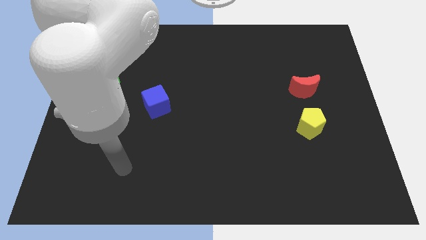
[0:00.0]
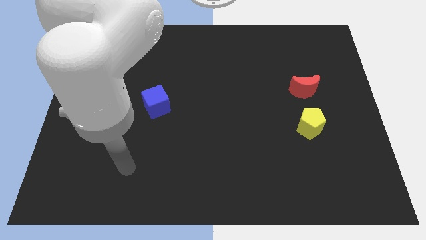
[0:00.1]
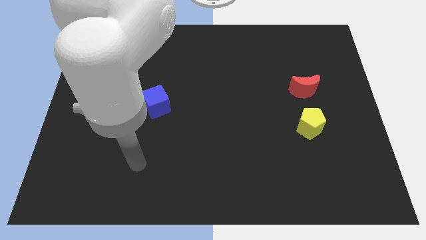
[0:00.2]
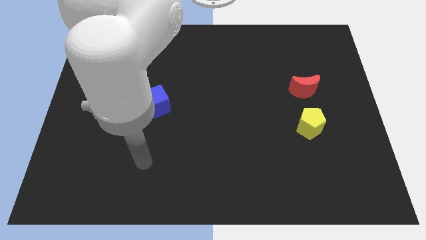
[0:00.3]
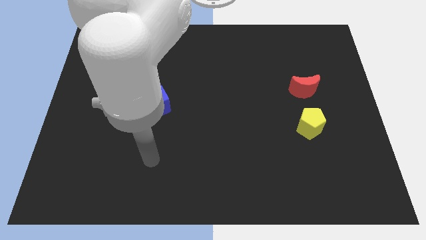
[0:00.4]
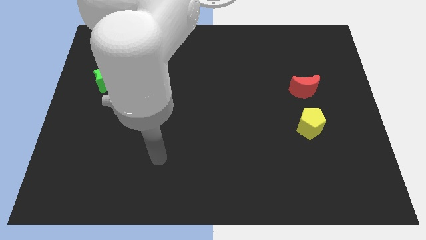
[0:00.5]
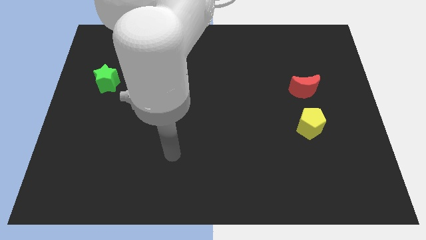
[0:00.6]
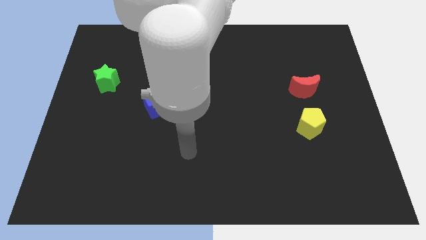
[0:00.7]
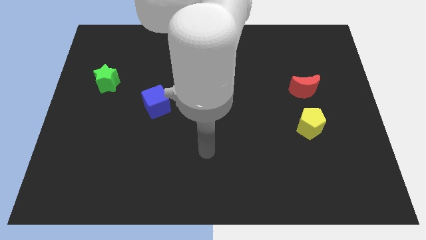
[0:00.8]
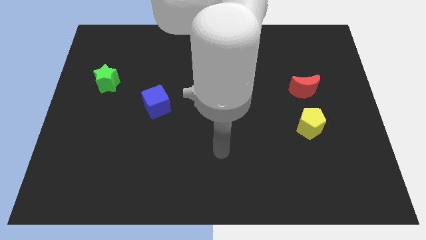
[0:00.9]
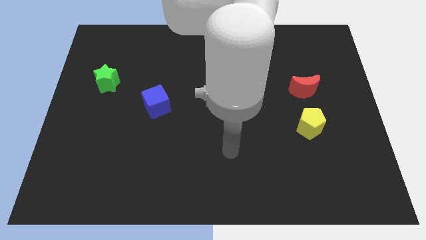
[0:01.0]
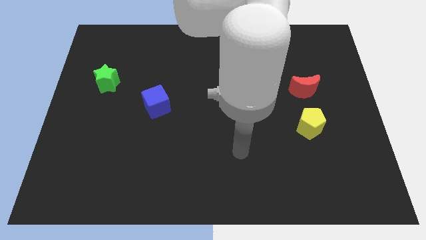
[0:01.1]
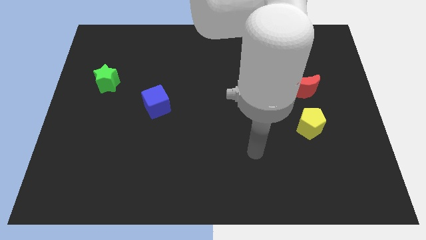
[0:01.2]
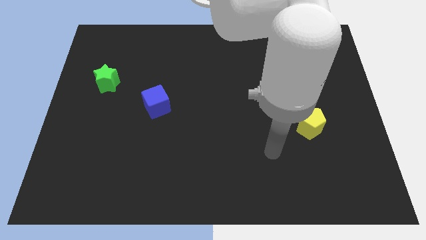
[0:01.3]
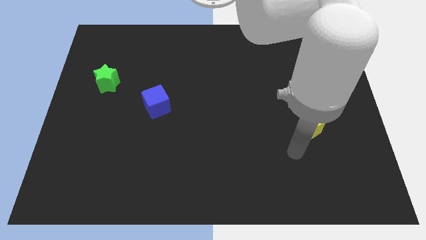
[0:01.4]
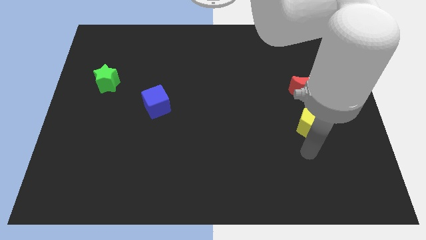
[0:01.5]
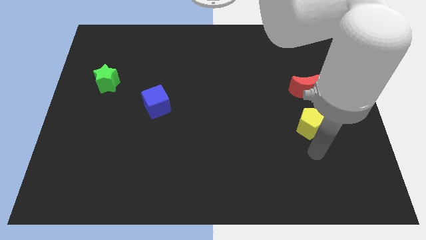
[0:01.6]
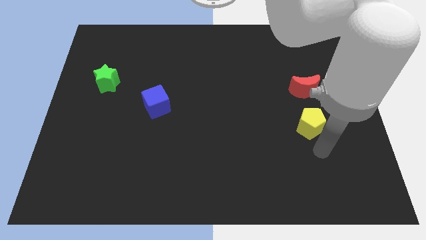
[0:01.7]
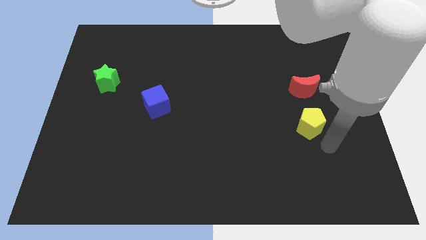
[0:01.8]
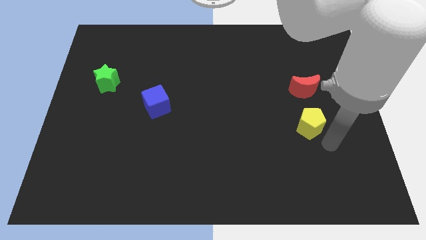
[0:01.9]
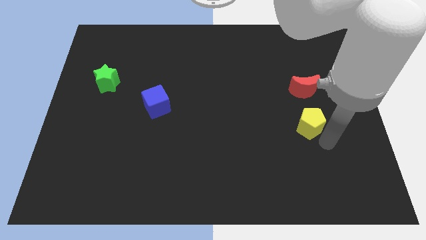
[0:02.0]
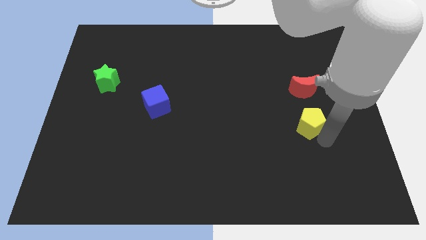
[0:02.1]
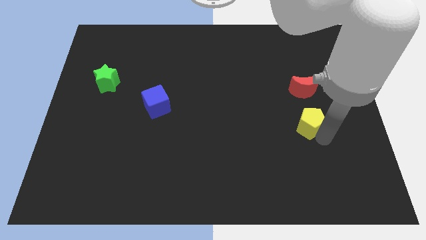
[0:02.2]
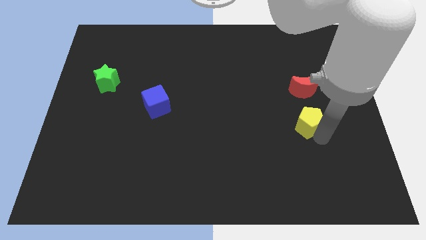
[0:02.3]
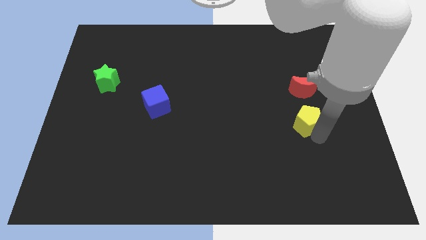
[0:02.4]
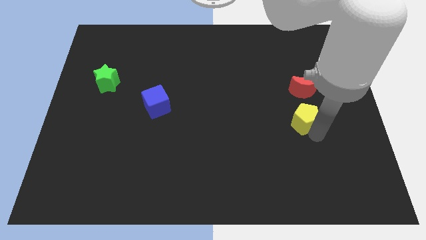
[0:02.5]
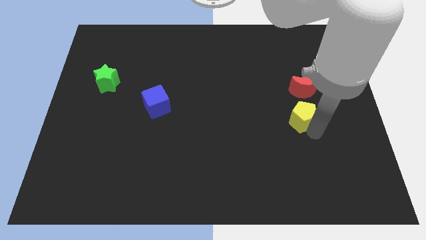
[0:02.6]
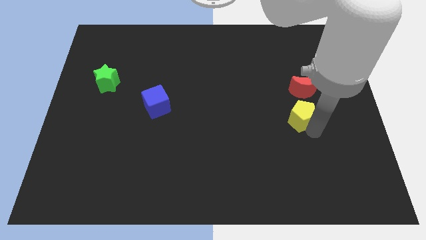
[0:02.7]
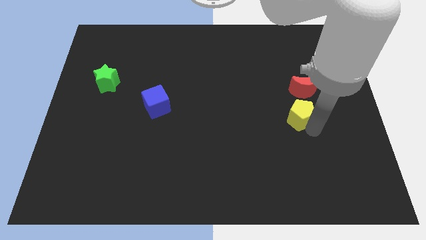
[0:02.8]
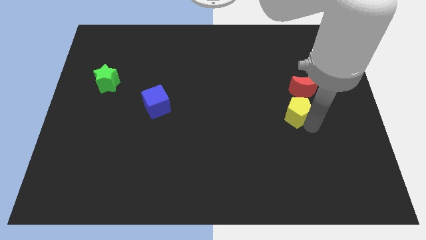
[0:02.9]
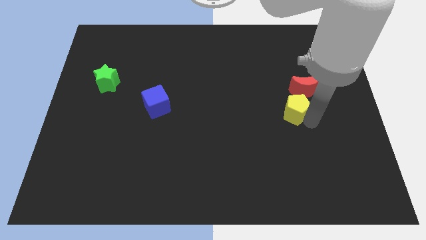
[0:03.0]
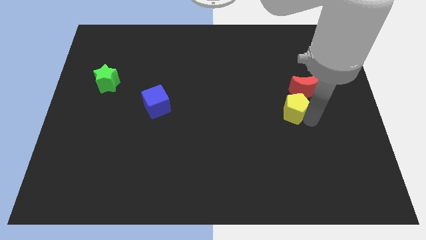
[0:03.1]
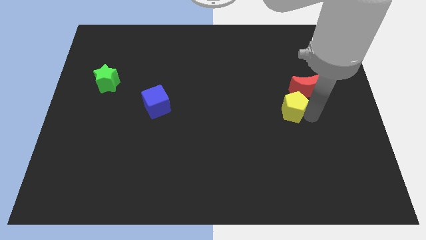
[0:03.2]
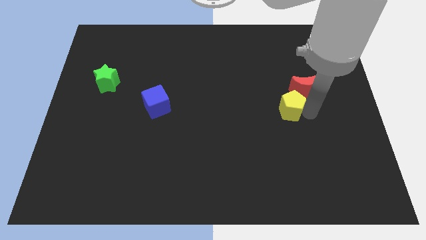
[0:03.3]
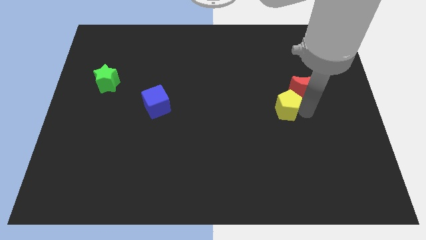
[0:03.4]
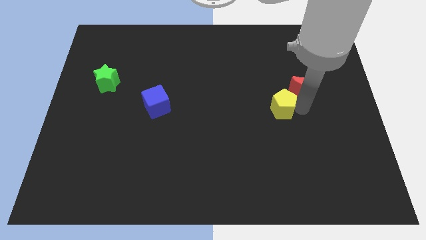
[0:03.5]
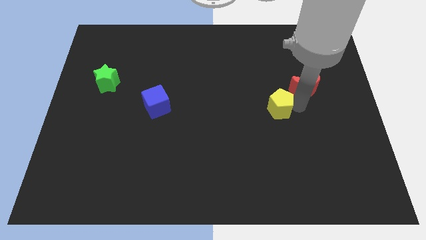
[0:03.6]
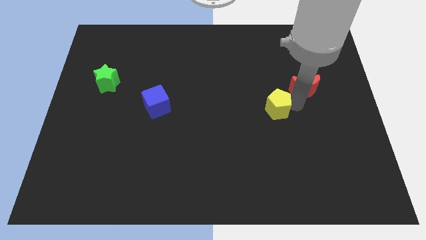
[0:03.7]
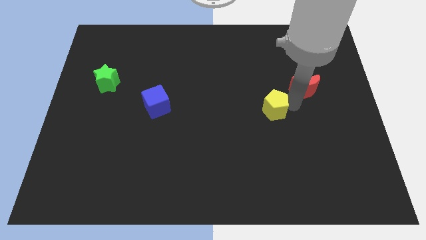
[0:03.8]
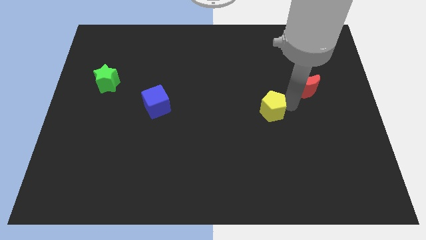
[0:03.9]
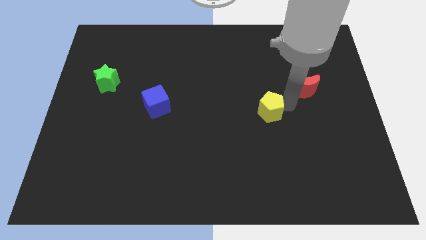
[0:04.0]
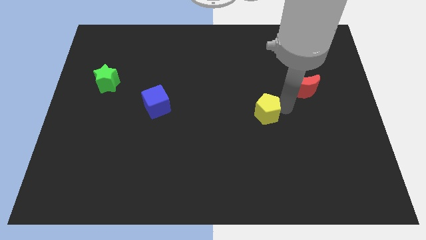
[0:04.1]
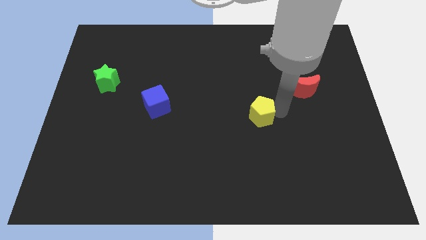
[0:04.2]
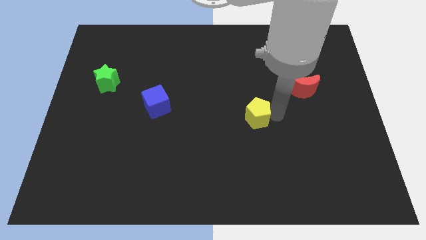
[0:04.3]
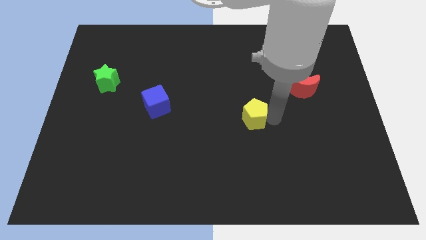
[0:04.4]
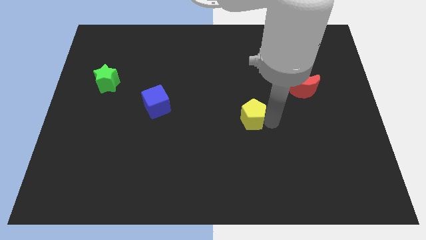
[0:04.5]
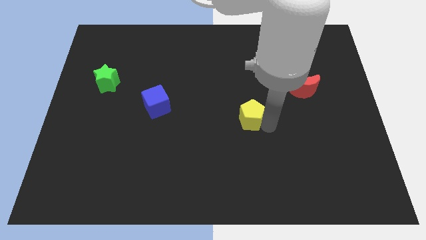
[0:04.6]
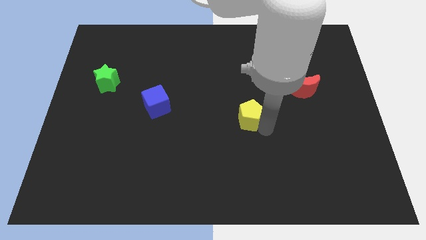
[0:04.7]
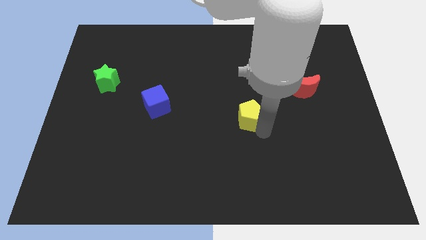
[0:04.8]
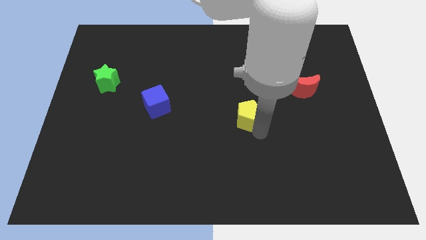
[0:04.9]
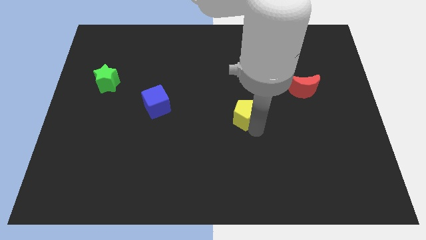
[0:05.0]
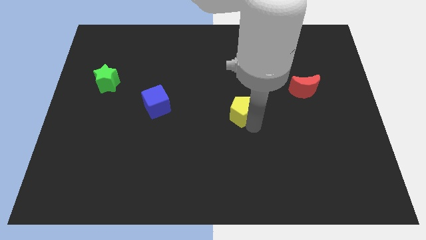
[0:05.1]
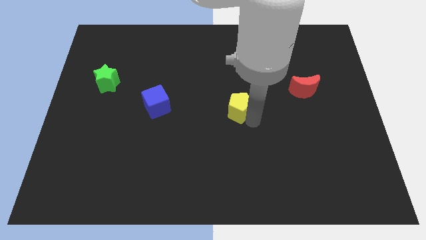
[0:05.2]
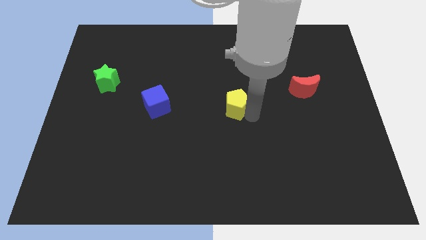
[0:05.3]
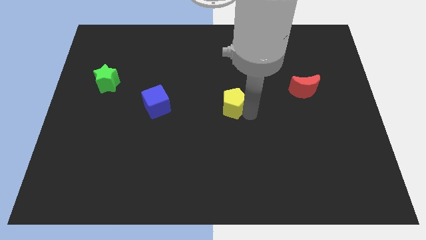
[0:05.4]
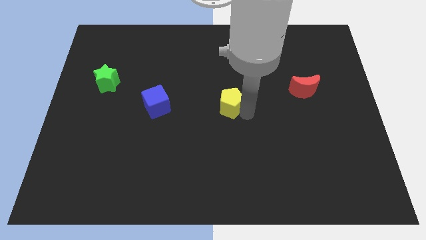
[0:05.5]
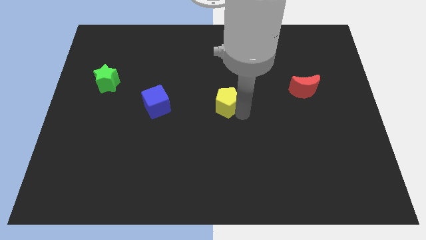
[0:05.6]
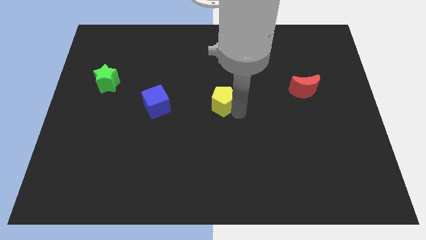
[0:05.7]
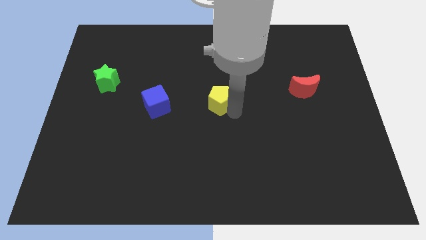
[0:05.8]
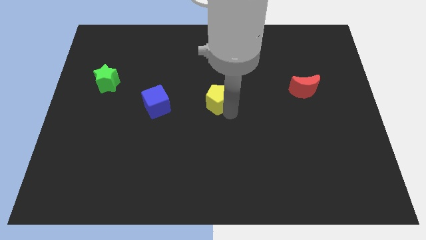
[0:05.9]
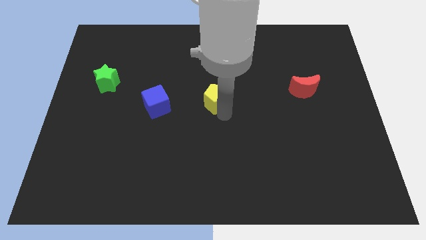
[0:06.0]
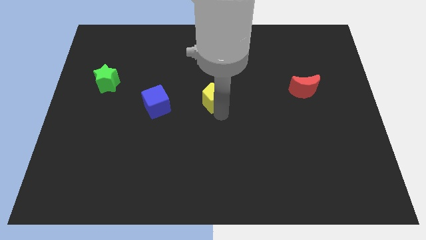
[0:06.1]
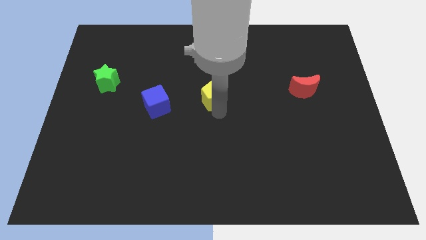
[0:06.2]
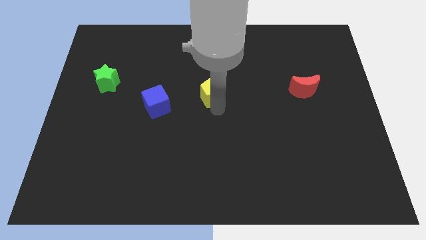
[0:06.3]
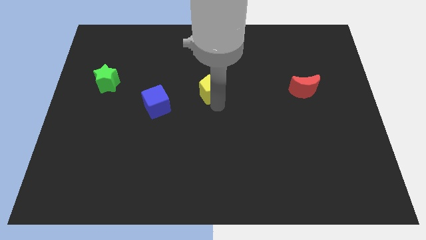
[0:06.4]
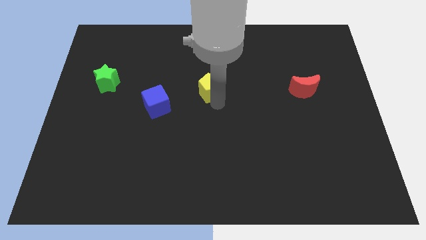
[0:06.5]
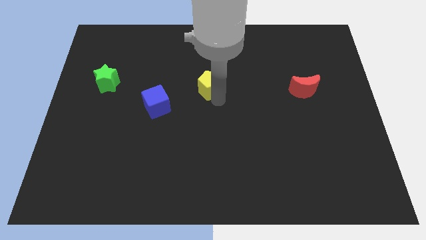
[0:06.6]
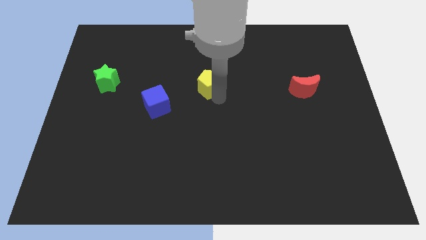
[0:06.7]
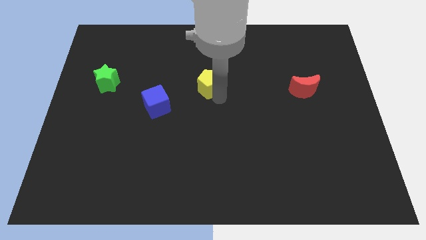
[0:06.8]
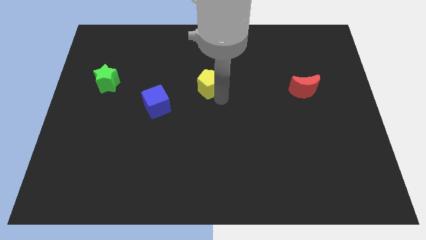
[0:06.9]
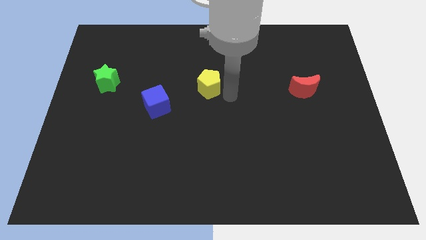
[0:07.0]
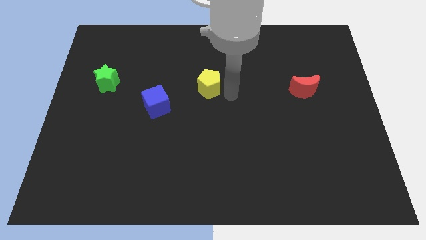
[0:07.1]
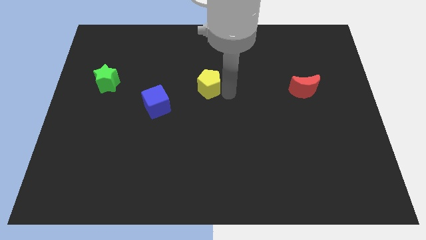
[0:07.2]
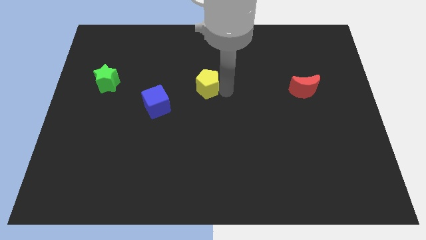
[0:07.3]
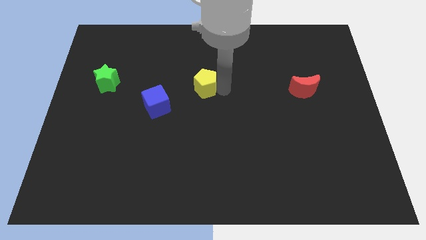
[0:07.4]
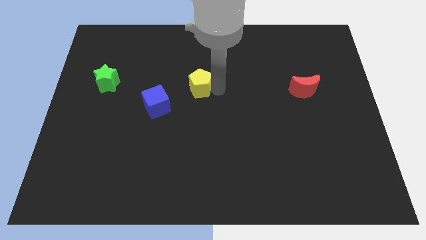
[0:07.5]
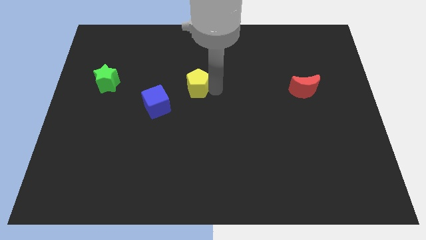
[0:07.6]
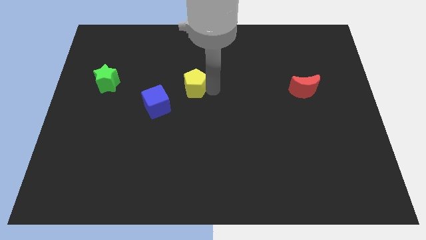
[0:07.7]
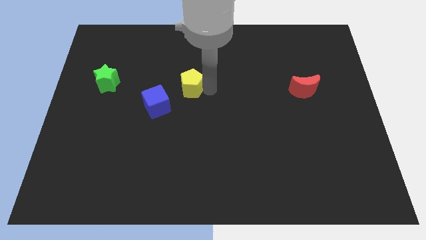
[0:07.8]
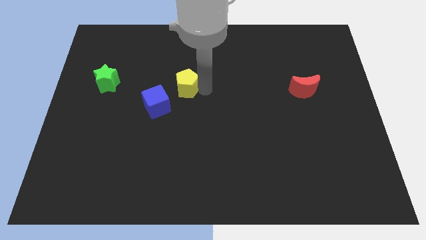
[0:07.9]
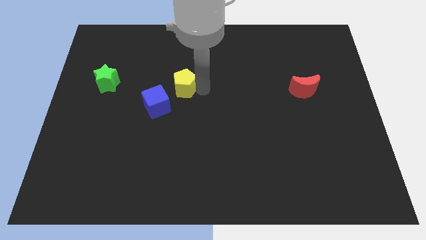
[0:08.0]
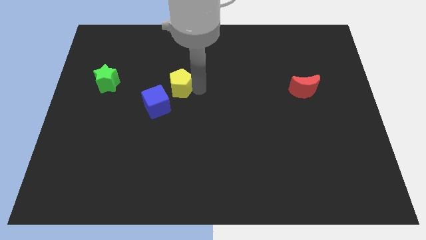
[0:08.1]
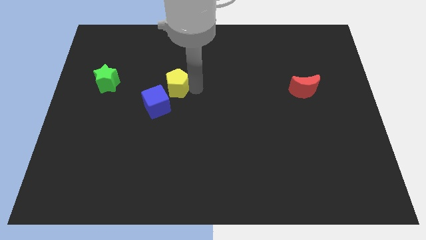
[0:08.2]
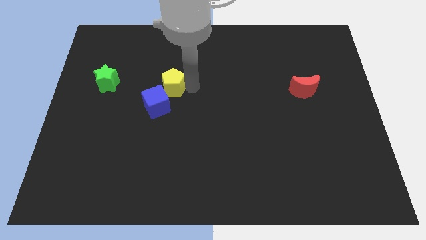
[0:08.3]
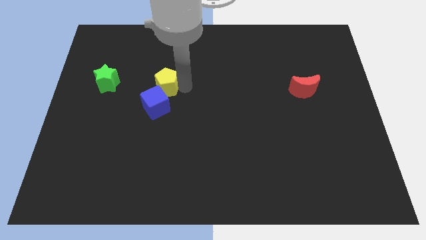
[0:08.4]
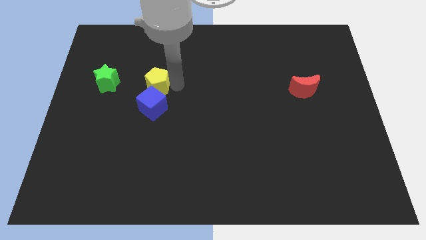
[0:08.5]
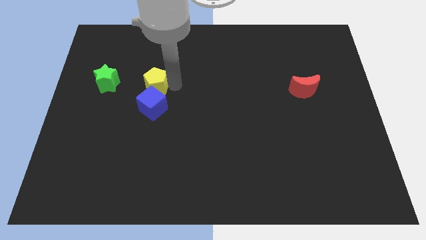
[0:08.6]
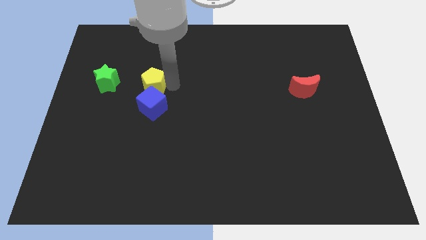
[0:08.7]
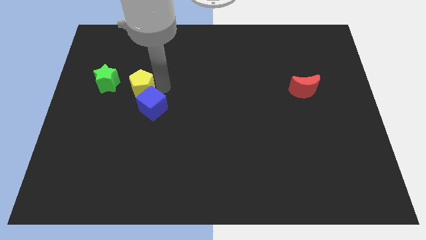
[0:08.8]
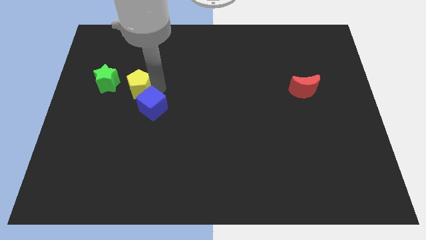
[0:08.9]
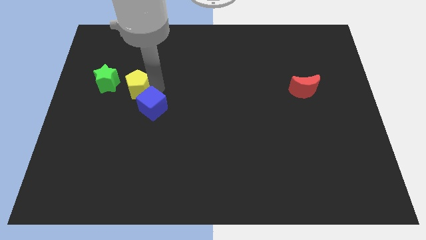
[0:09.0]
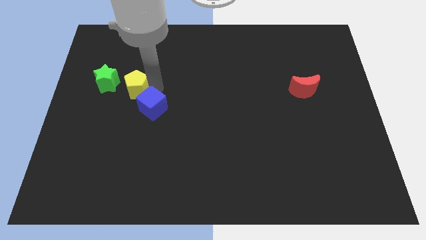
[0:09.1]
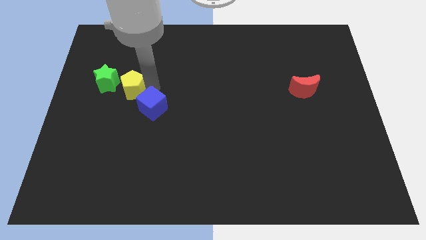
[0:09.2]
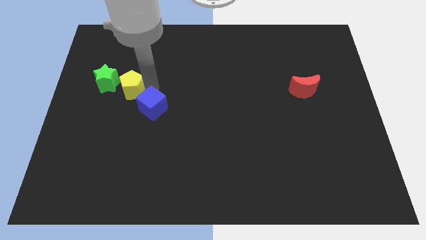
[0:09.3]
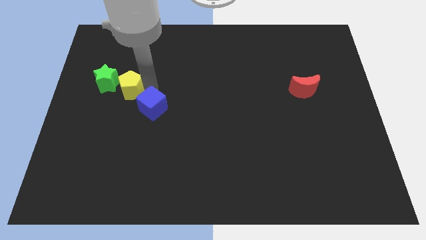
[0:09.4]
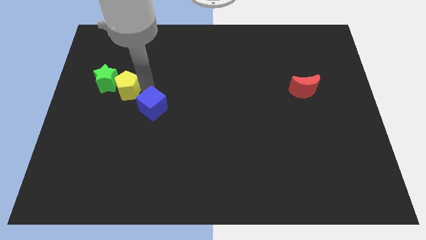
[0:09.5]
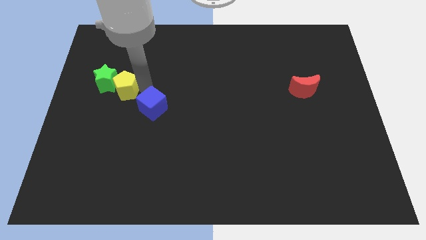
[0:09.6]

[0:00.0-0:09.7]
slide the yellow block close to the green block
